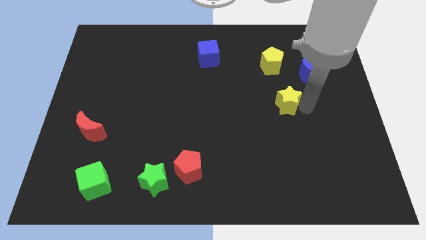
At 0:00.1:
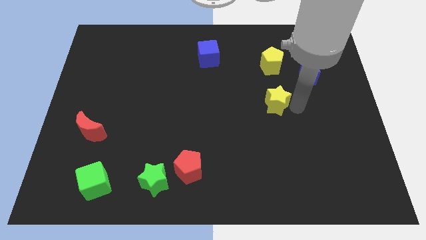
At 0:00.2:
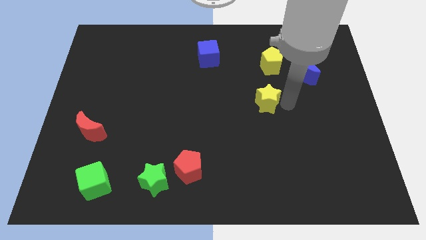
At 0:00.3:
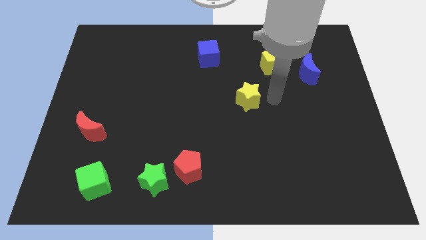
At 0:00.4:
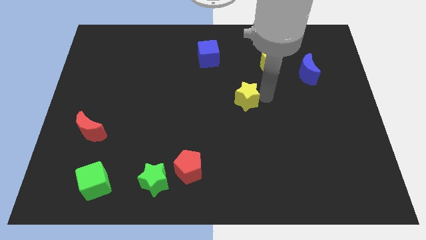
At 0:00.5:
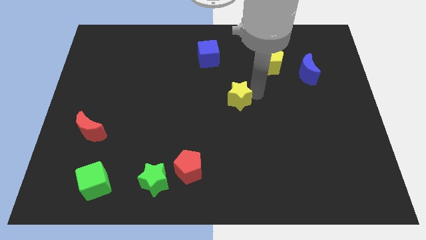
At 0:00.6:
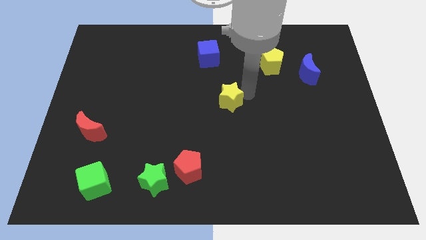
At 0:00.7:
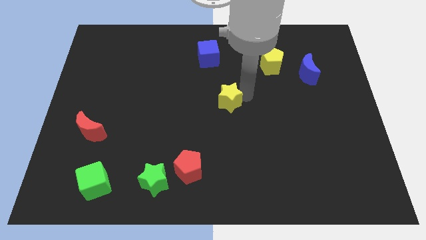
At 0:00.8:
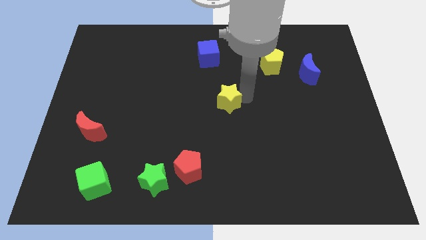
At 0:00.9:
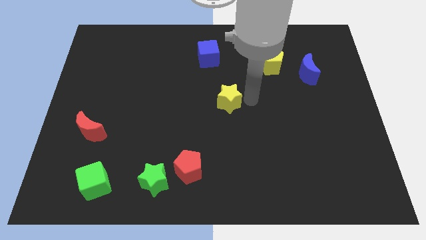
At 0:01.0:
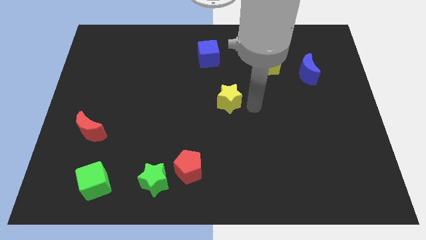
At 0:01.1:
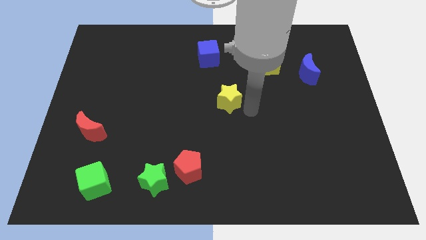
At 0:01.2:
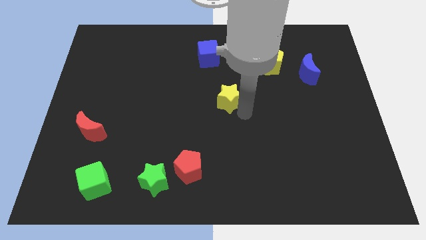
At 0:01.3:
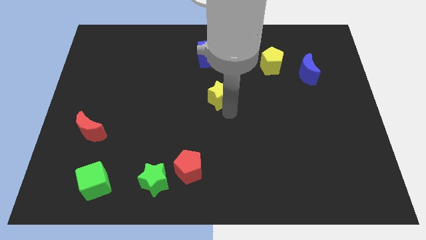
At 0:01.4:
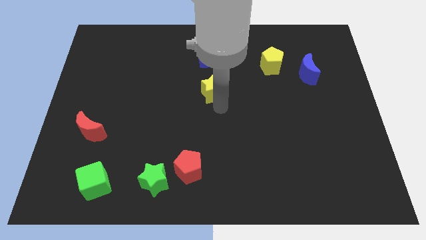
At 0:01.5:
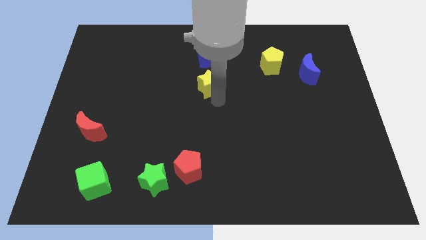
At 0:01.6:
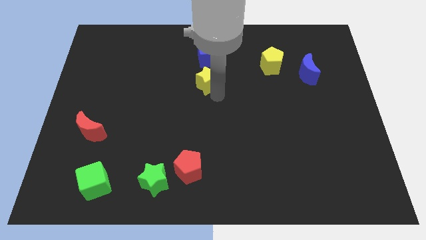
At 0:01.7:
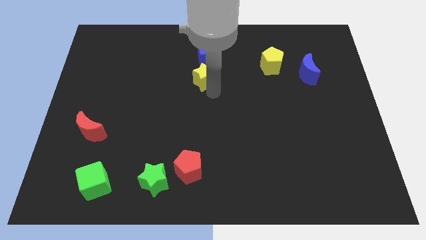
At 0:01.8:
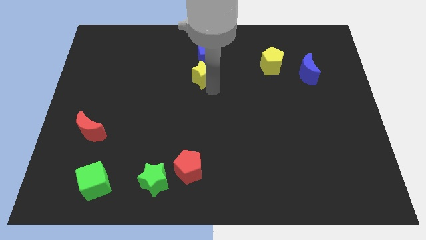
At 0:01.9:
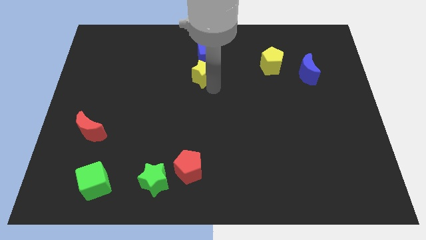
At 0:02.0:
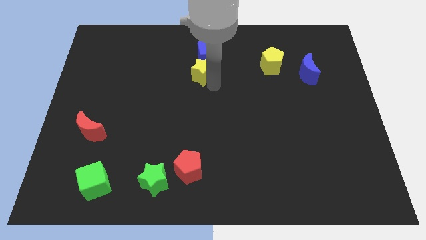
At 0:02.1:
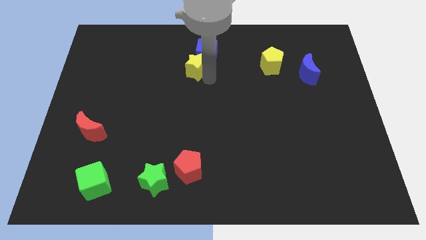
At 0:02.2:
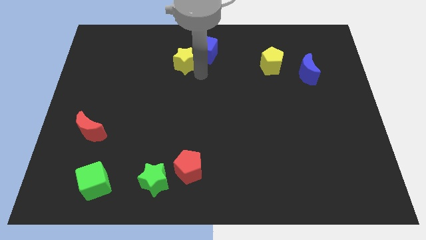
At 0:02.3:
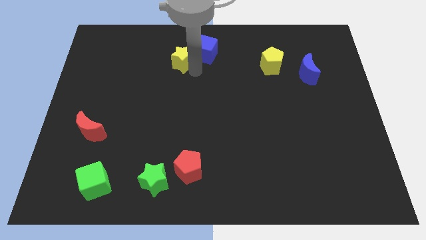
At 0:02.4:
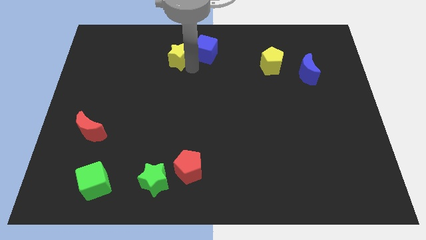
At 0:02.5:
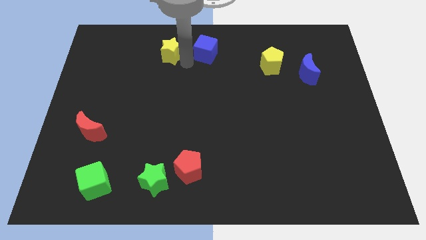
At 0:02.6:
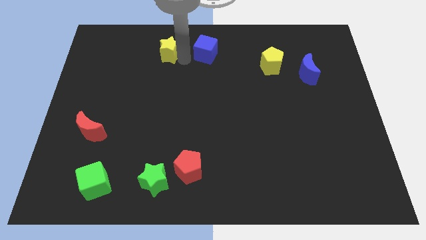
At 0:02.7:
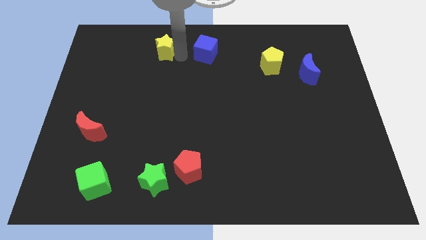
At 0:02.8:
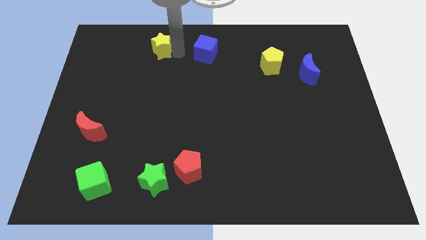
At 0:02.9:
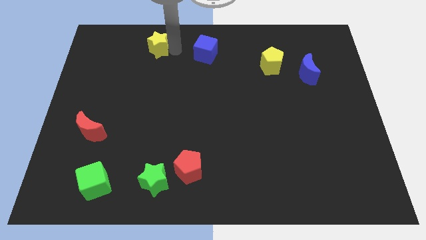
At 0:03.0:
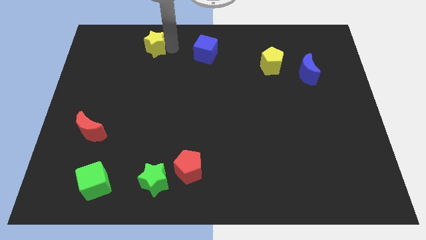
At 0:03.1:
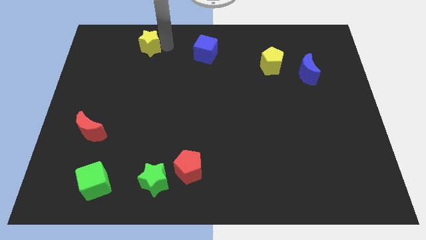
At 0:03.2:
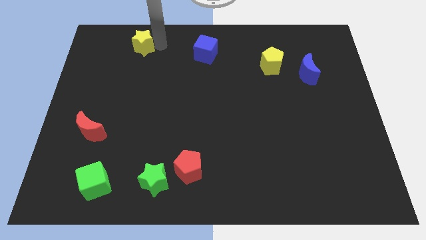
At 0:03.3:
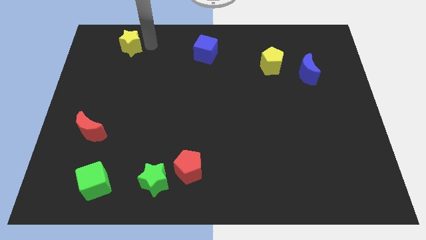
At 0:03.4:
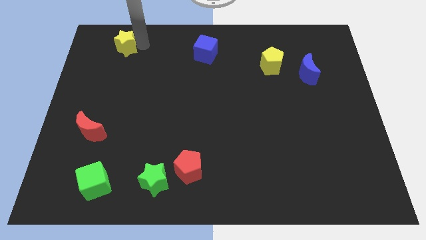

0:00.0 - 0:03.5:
place the yellow star left to the blue cube

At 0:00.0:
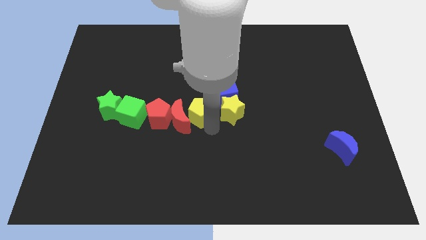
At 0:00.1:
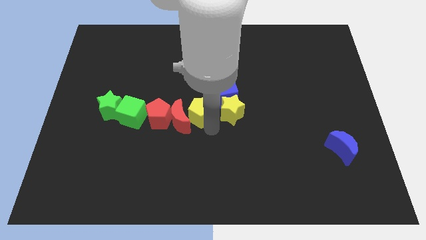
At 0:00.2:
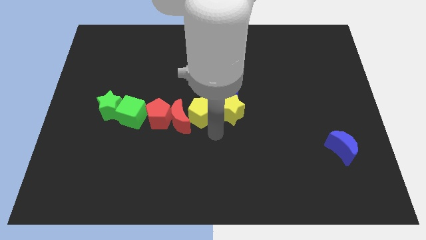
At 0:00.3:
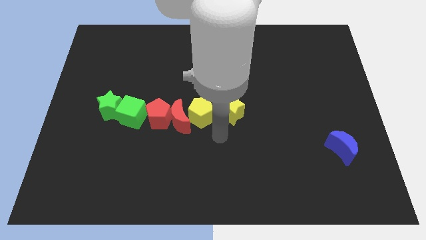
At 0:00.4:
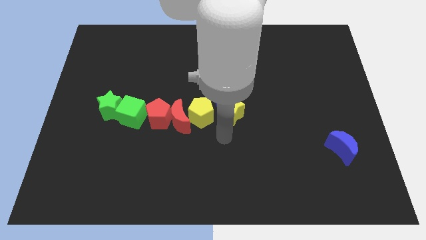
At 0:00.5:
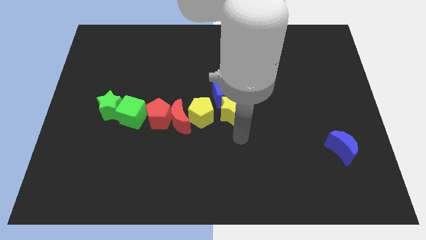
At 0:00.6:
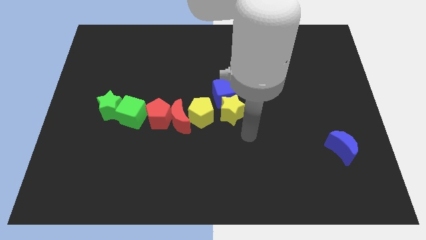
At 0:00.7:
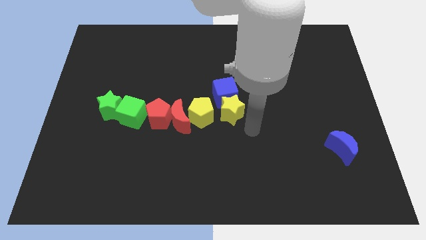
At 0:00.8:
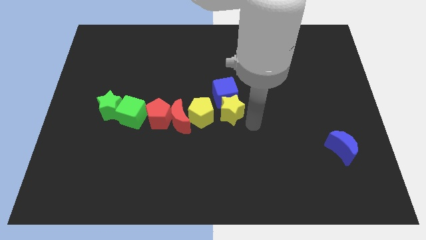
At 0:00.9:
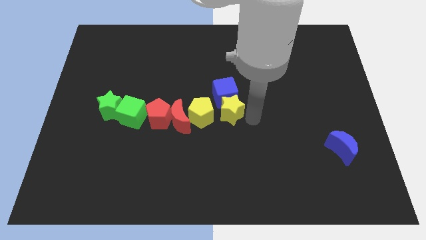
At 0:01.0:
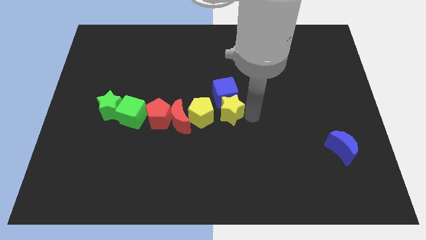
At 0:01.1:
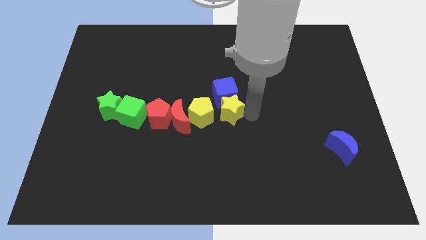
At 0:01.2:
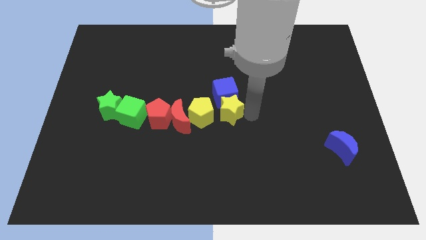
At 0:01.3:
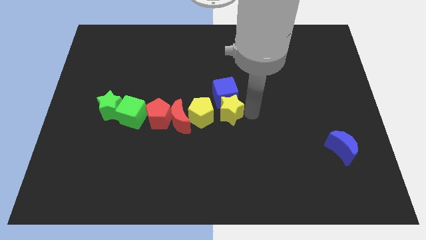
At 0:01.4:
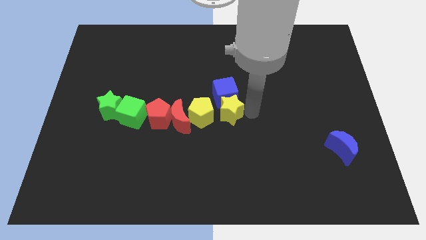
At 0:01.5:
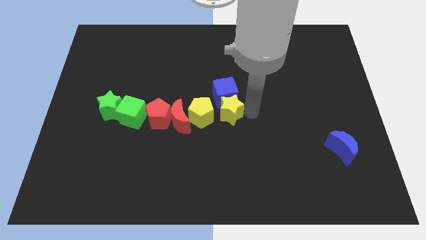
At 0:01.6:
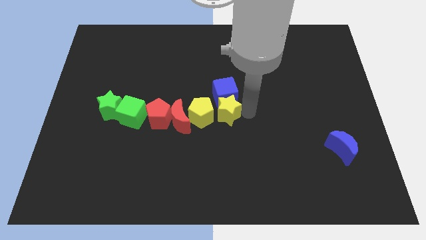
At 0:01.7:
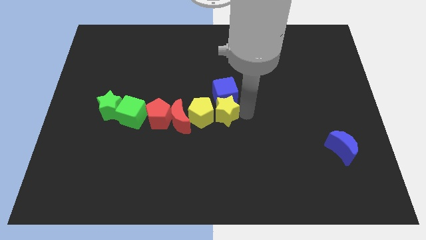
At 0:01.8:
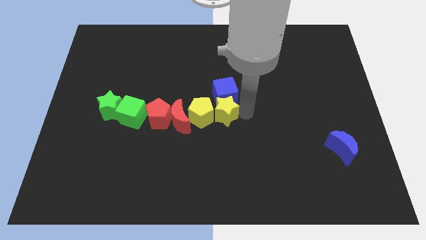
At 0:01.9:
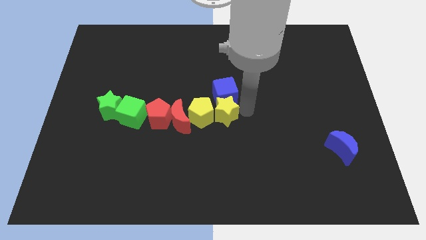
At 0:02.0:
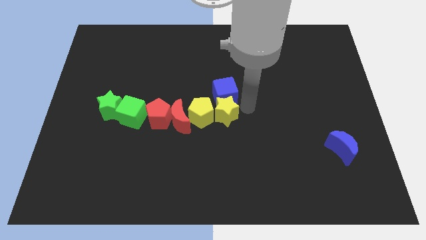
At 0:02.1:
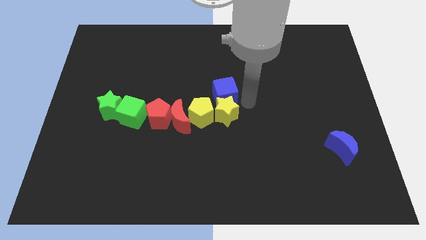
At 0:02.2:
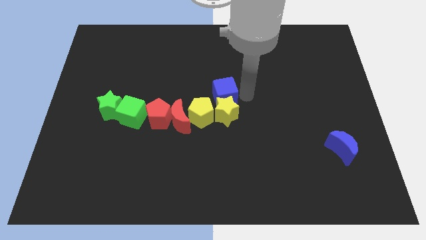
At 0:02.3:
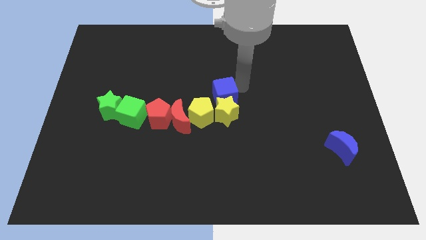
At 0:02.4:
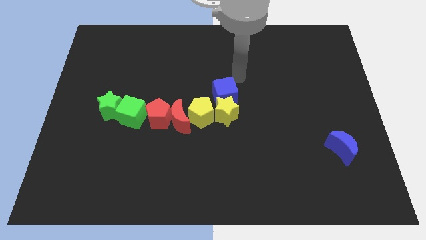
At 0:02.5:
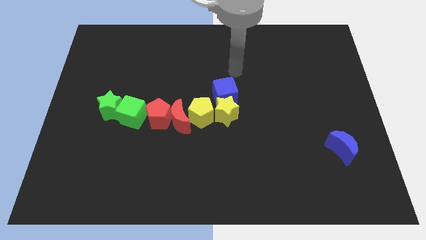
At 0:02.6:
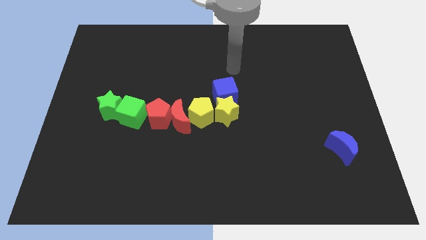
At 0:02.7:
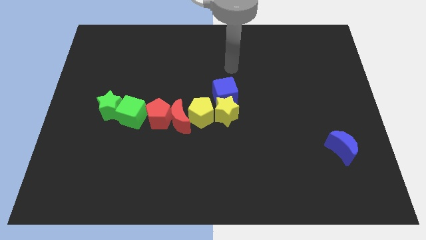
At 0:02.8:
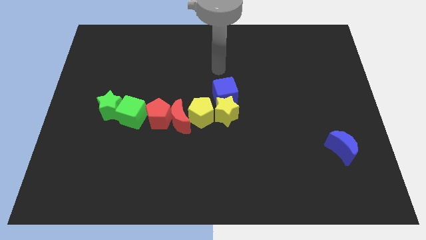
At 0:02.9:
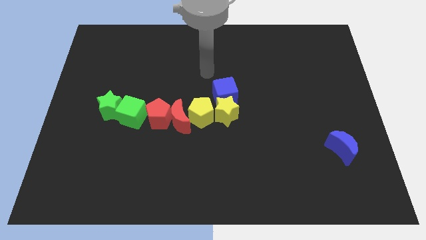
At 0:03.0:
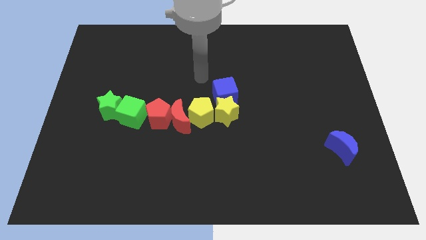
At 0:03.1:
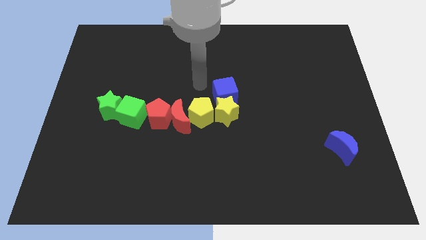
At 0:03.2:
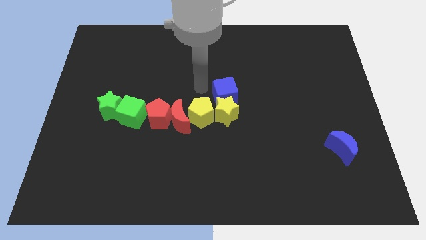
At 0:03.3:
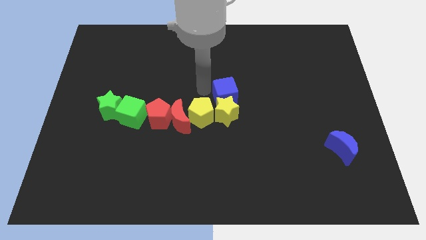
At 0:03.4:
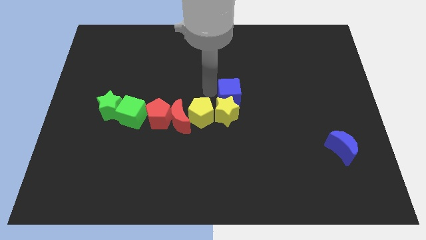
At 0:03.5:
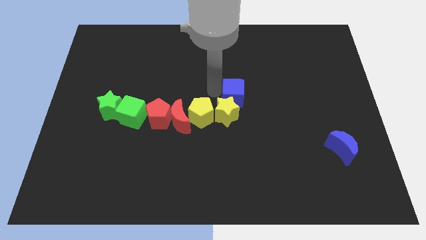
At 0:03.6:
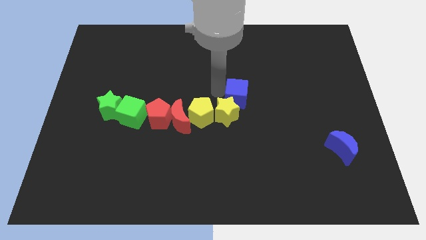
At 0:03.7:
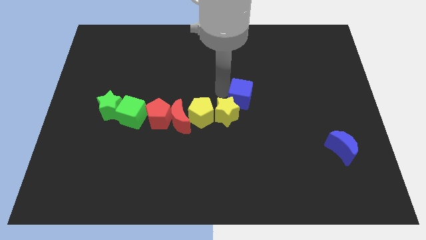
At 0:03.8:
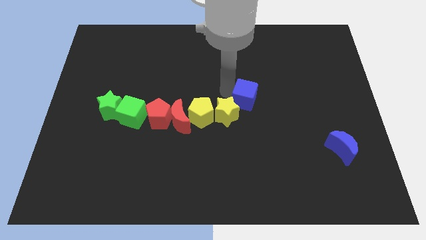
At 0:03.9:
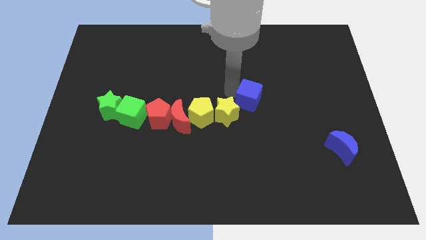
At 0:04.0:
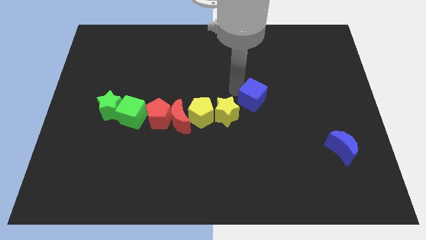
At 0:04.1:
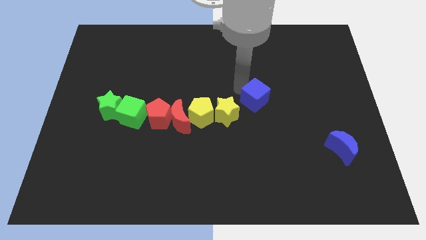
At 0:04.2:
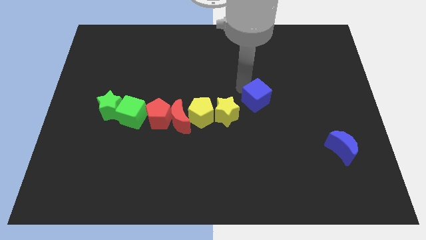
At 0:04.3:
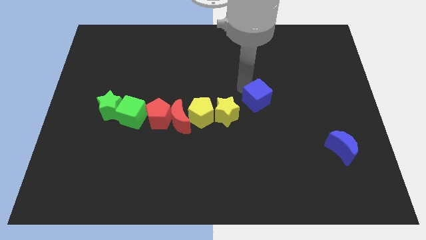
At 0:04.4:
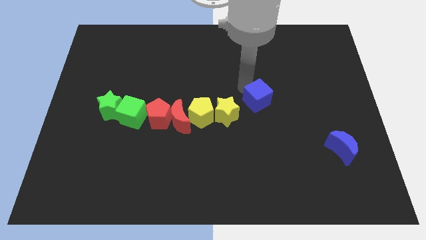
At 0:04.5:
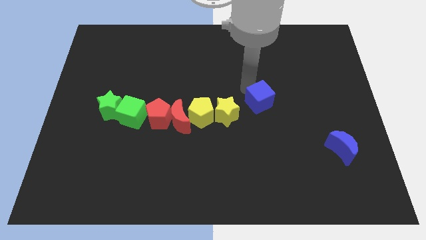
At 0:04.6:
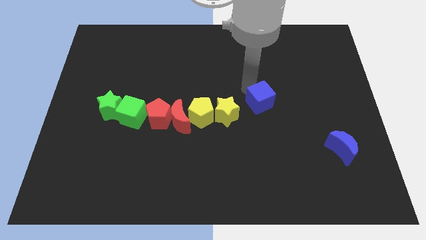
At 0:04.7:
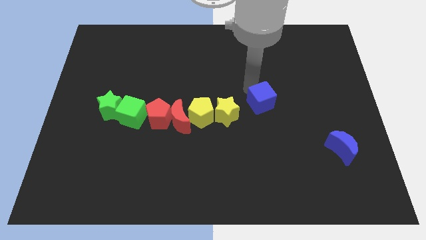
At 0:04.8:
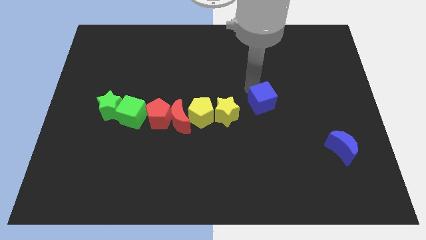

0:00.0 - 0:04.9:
push blue cube slightly towards right

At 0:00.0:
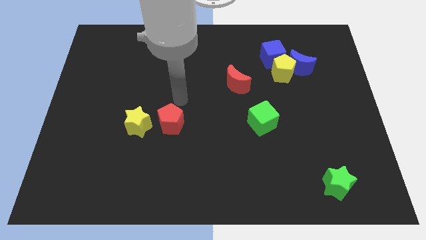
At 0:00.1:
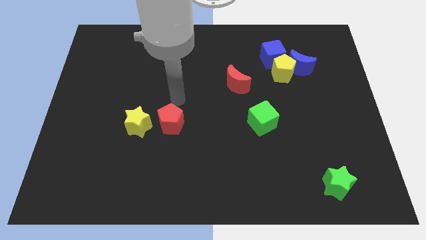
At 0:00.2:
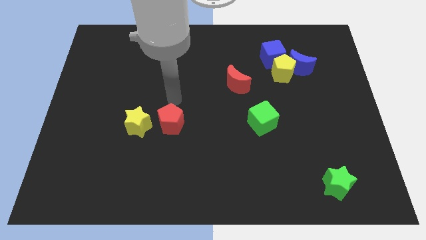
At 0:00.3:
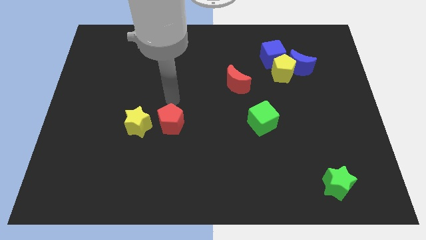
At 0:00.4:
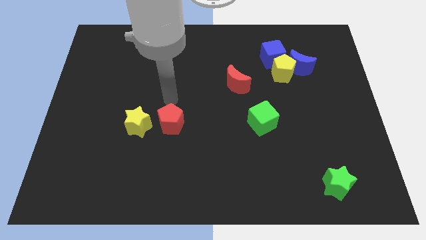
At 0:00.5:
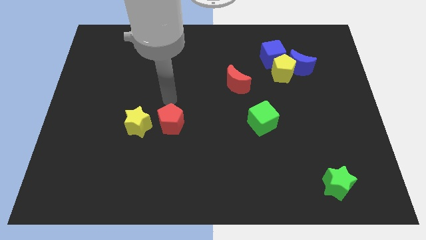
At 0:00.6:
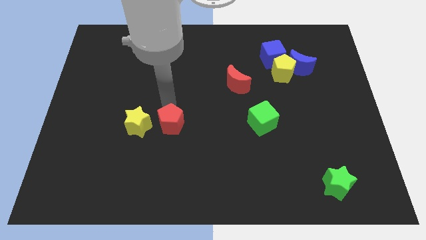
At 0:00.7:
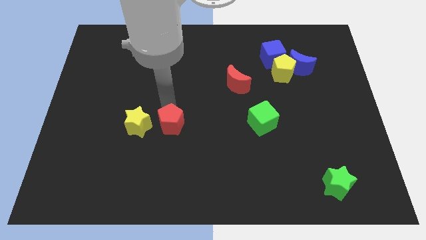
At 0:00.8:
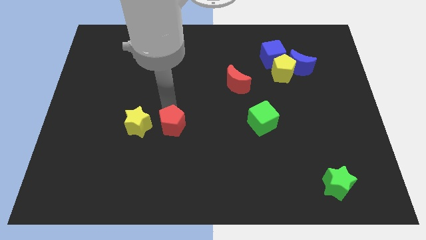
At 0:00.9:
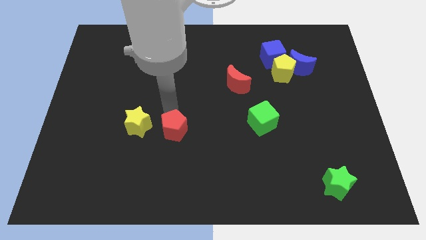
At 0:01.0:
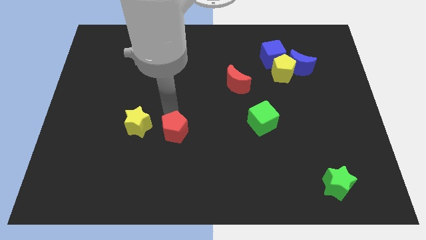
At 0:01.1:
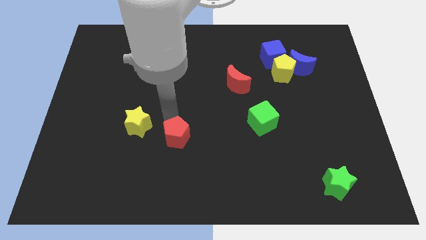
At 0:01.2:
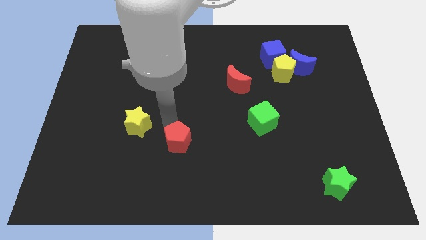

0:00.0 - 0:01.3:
push the red pentagon slightly to the bottom
